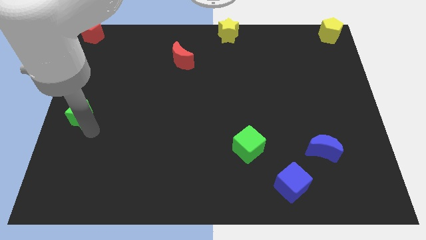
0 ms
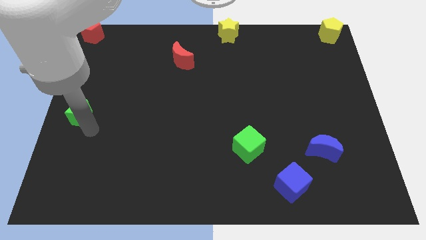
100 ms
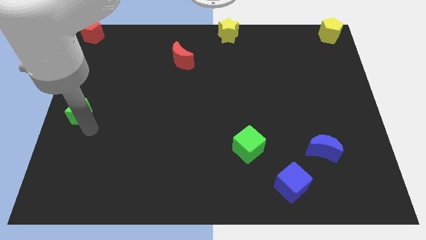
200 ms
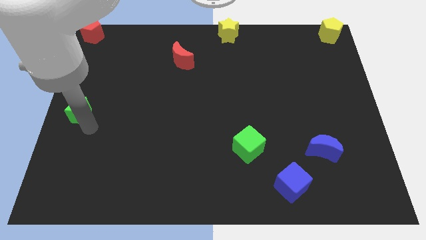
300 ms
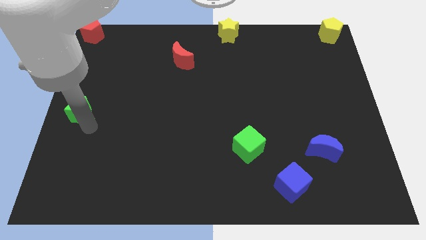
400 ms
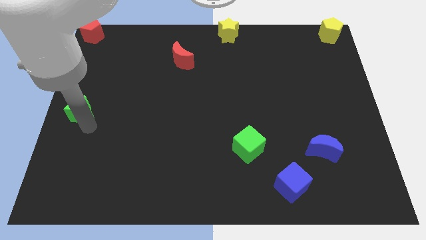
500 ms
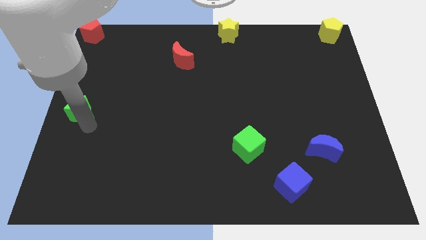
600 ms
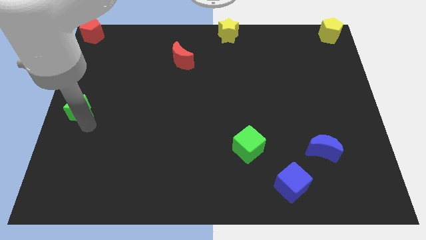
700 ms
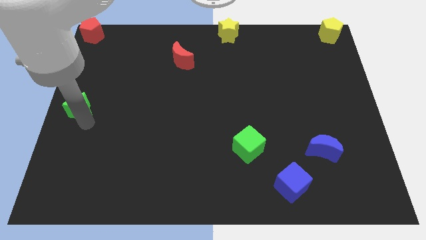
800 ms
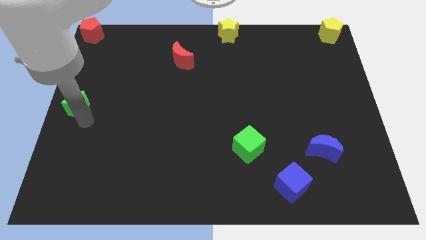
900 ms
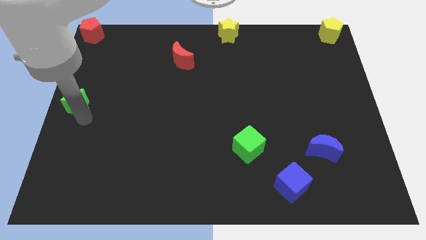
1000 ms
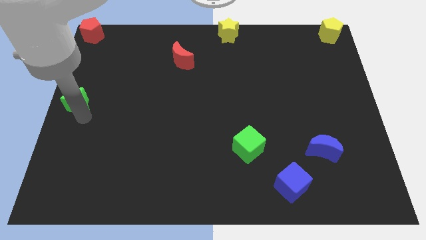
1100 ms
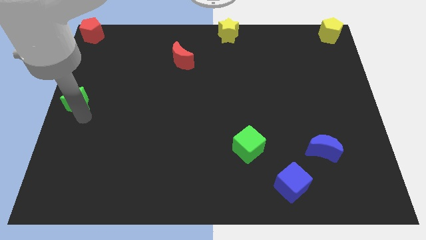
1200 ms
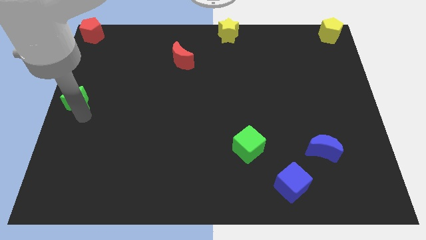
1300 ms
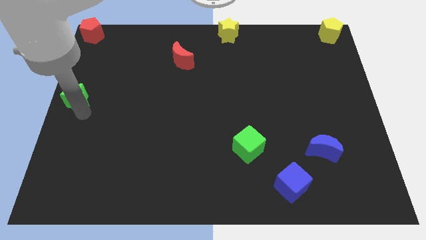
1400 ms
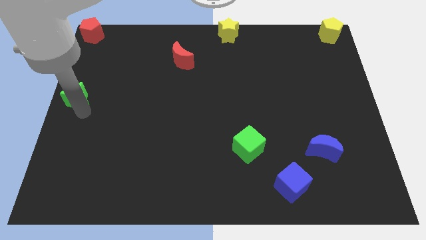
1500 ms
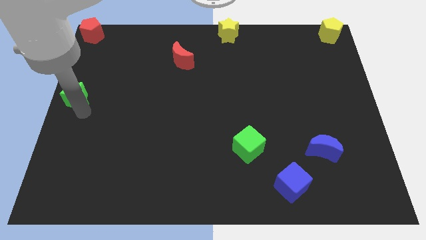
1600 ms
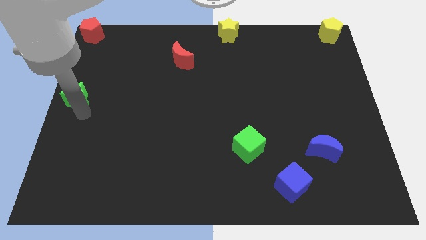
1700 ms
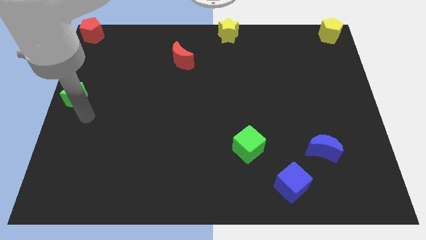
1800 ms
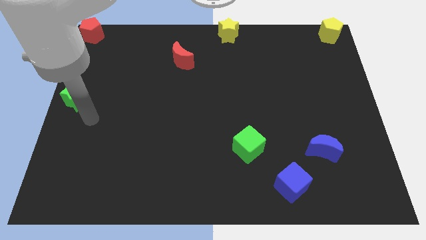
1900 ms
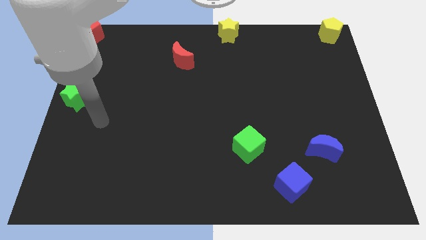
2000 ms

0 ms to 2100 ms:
slide green star towards center left of the board

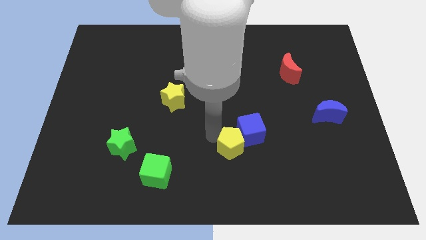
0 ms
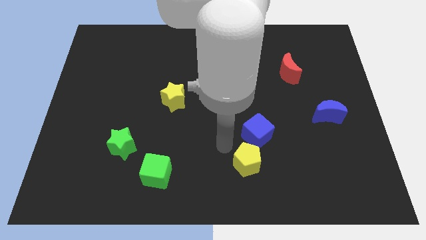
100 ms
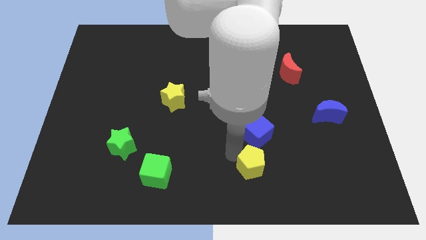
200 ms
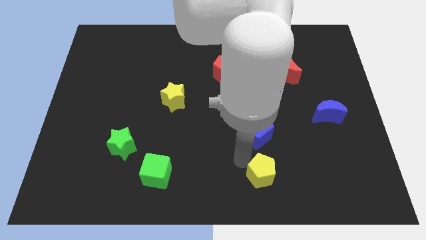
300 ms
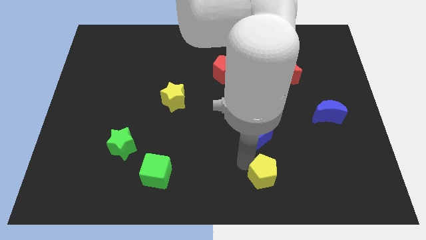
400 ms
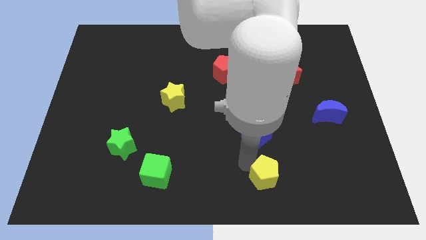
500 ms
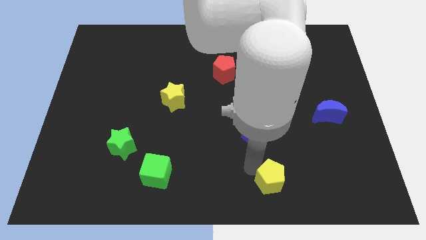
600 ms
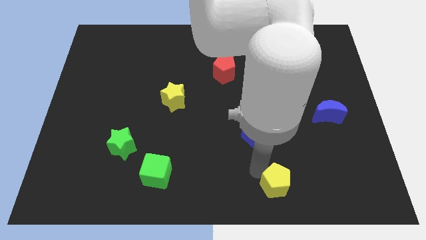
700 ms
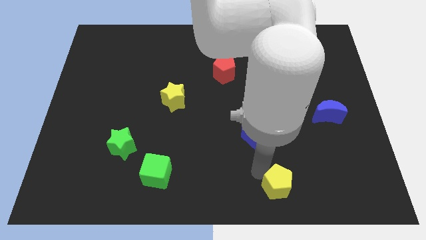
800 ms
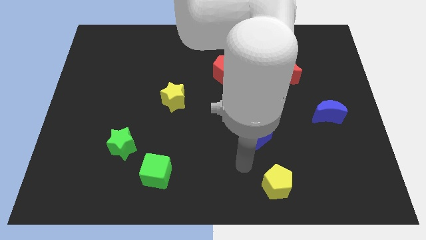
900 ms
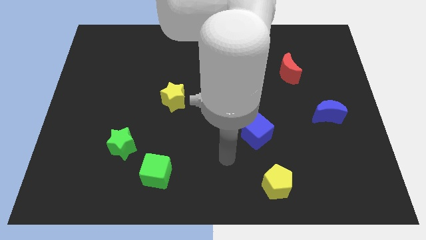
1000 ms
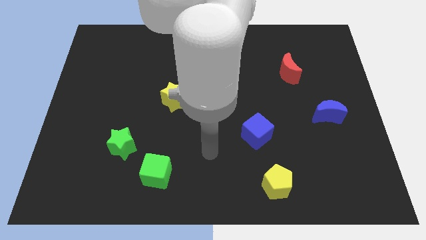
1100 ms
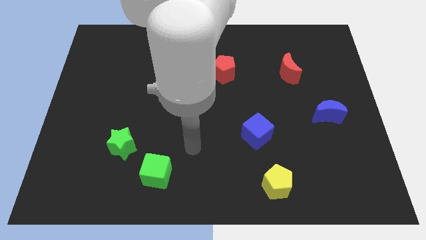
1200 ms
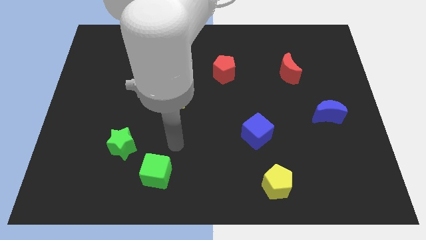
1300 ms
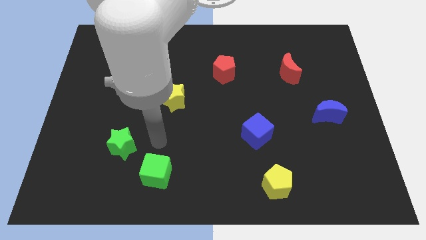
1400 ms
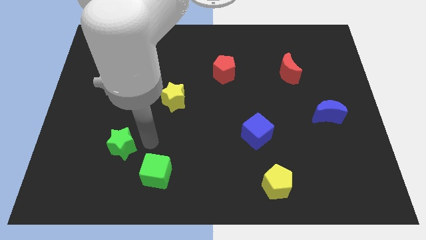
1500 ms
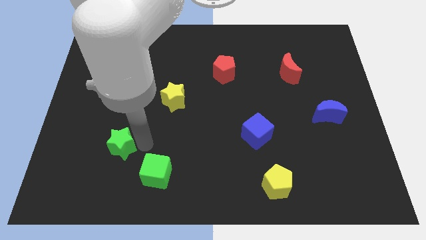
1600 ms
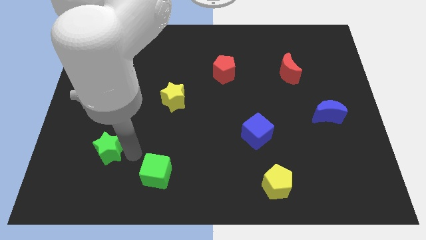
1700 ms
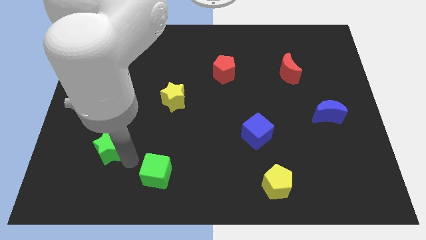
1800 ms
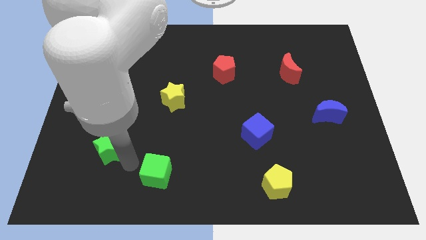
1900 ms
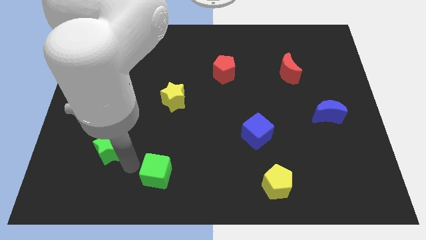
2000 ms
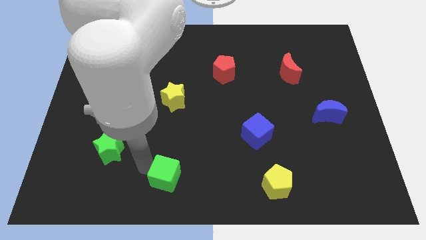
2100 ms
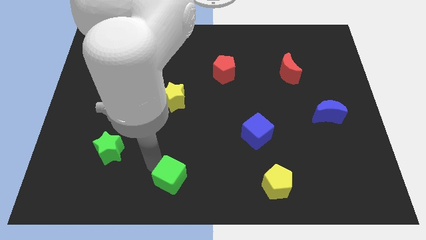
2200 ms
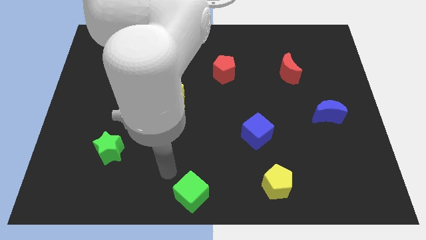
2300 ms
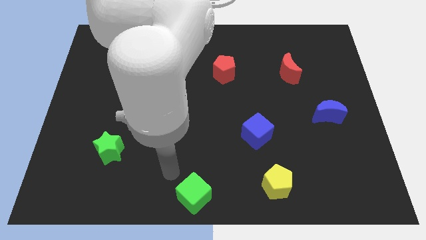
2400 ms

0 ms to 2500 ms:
place the green cube to the bottom middle of the board

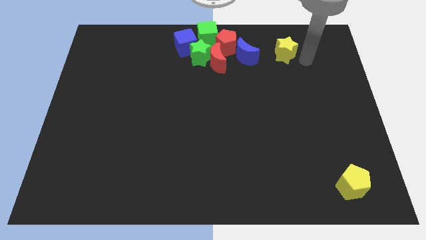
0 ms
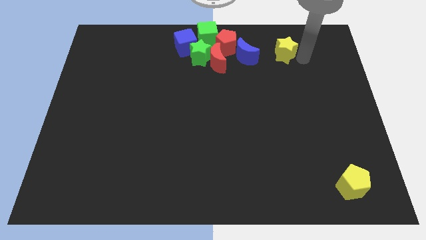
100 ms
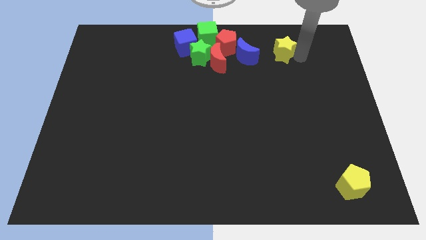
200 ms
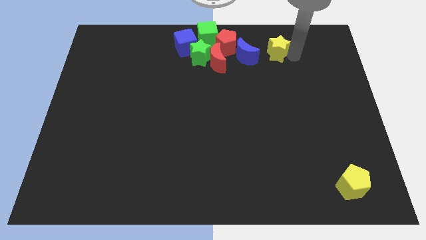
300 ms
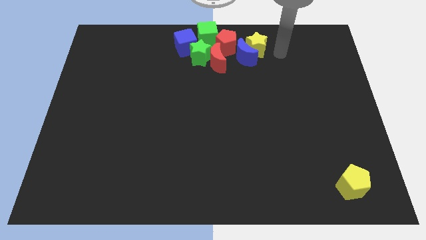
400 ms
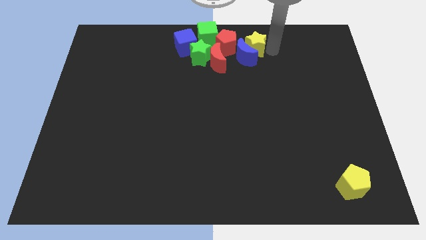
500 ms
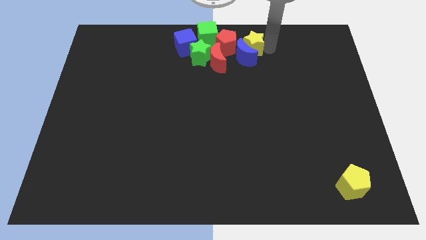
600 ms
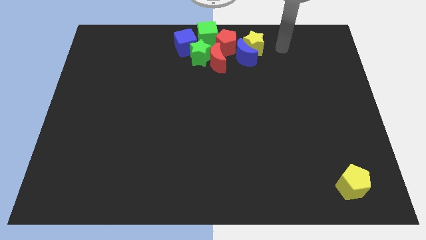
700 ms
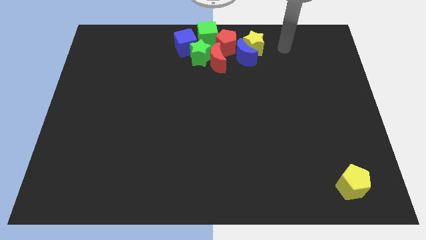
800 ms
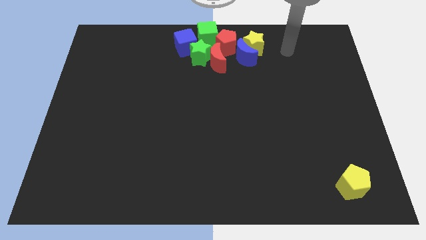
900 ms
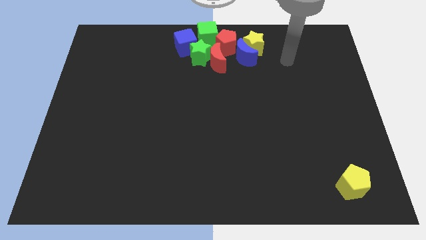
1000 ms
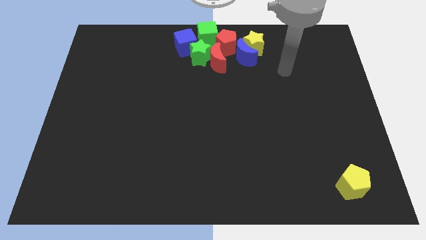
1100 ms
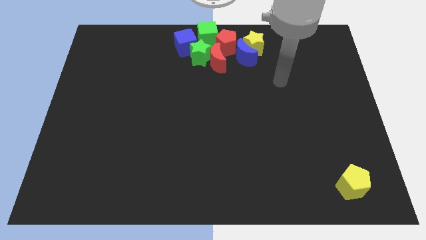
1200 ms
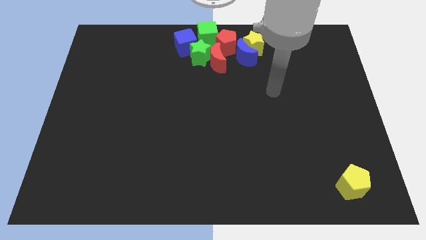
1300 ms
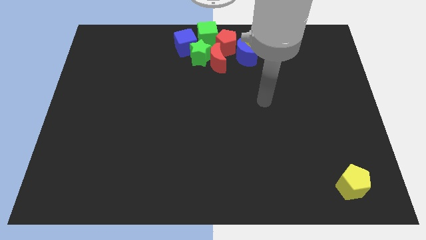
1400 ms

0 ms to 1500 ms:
move the yellow star to the right of blue crescent

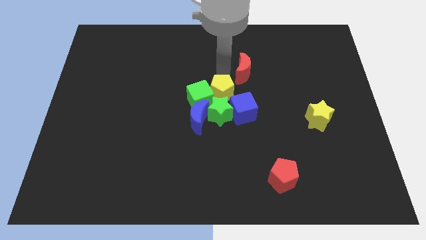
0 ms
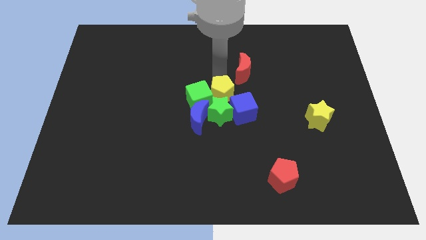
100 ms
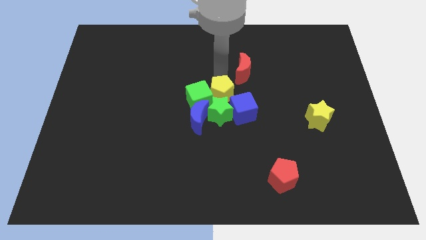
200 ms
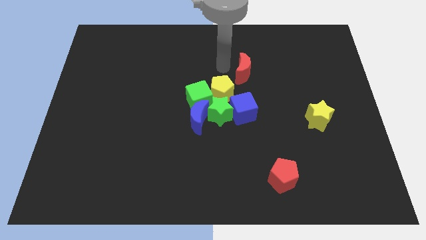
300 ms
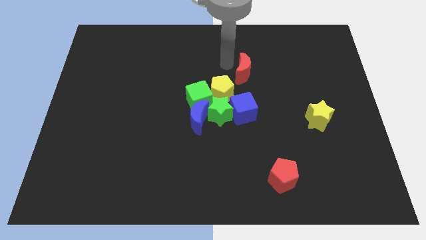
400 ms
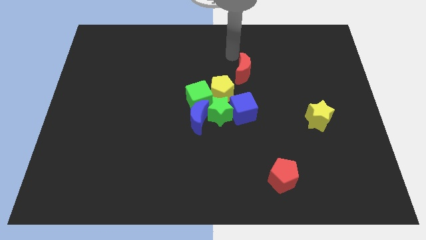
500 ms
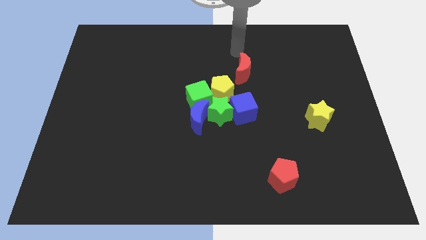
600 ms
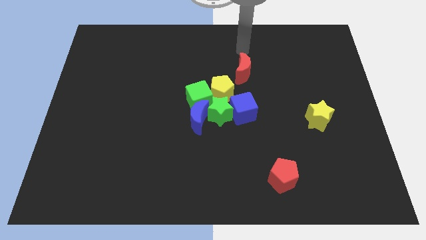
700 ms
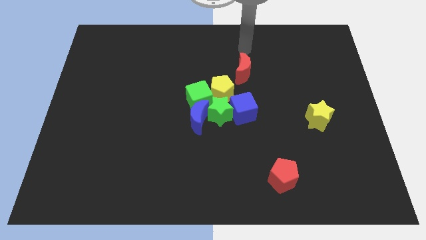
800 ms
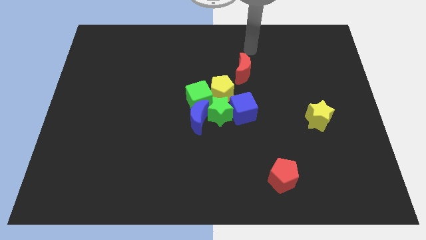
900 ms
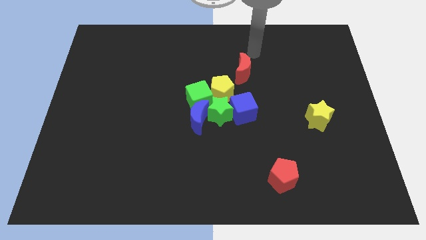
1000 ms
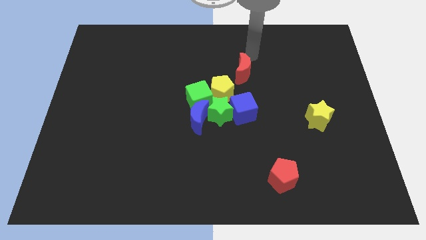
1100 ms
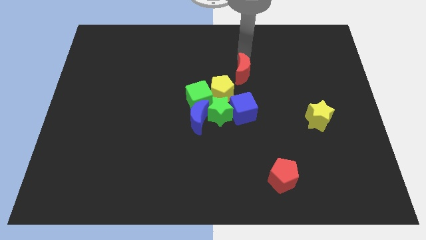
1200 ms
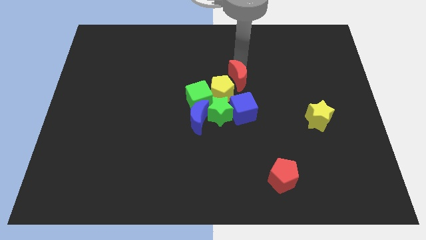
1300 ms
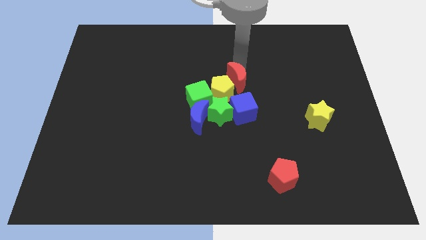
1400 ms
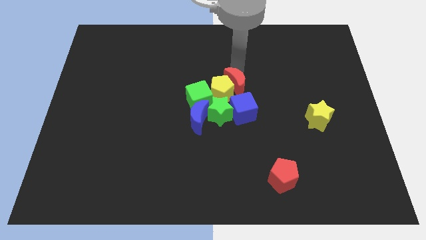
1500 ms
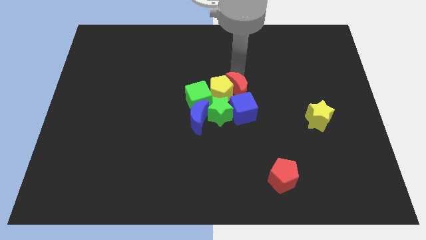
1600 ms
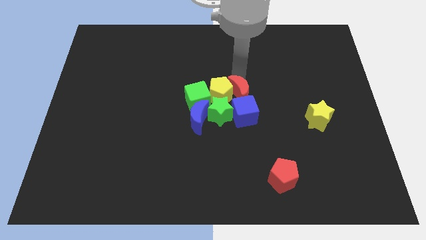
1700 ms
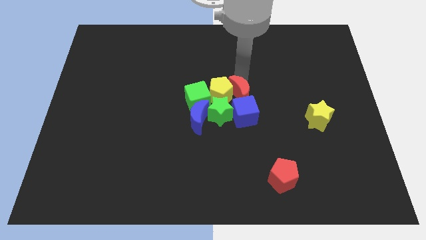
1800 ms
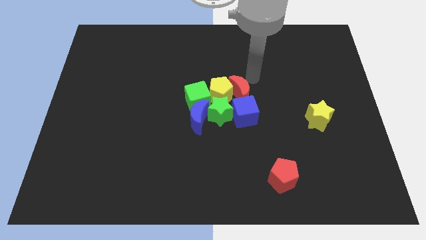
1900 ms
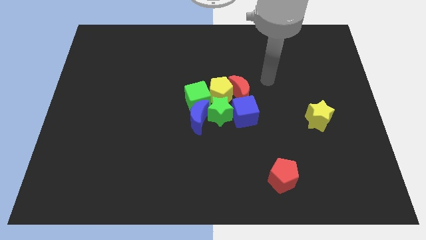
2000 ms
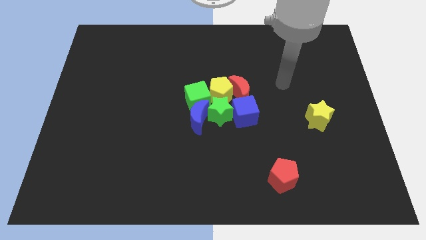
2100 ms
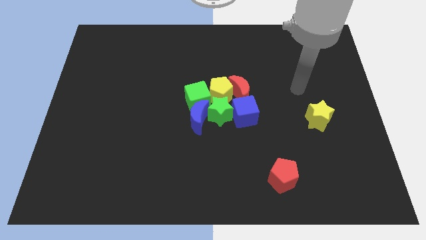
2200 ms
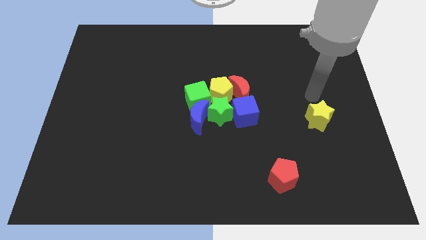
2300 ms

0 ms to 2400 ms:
put the red moon at the top of blue cube

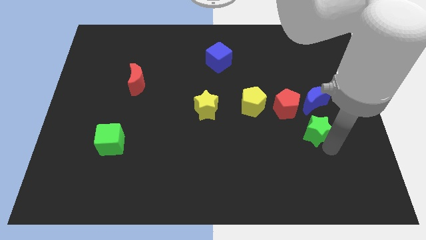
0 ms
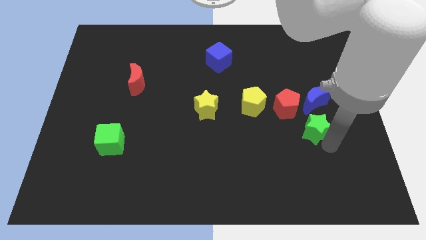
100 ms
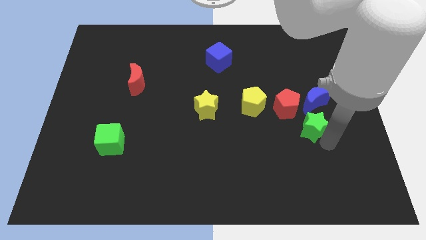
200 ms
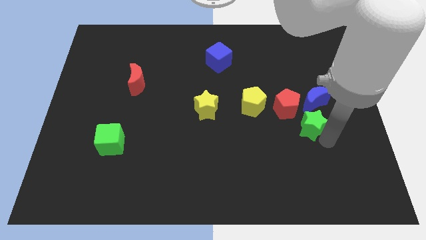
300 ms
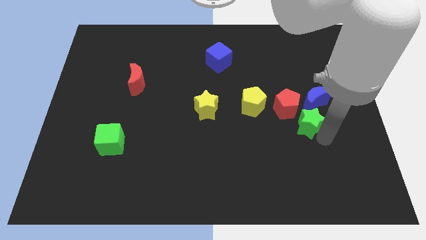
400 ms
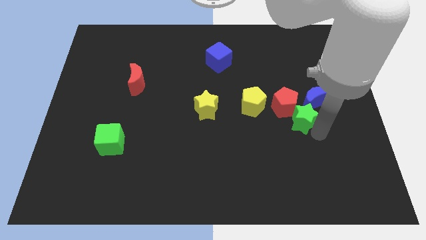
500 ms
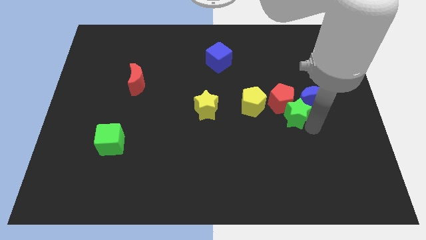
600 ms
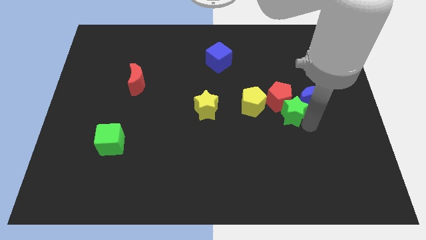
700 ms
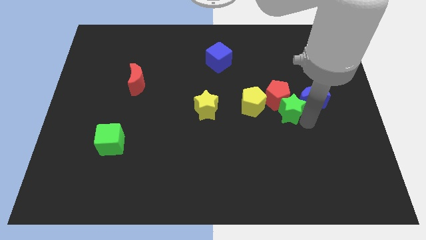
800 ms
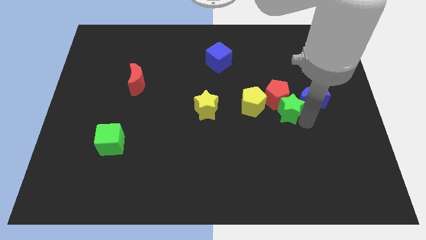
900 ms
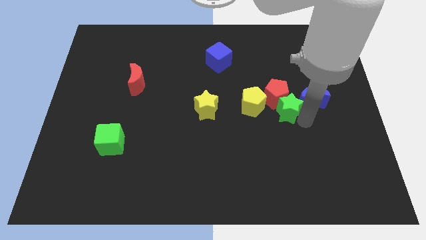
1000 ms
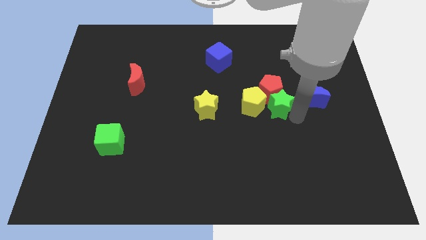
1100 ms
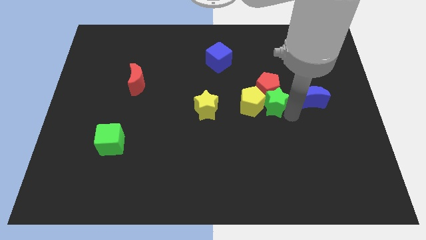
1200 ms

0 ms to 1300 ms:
move the green star below the red pentagon
